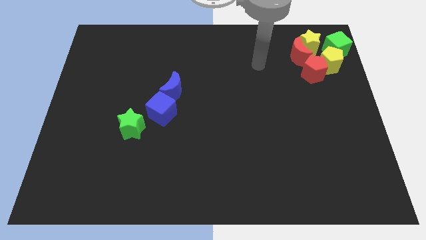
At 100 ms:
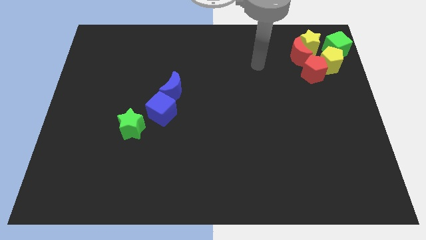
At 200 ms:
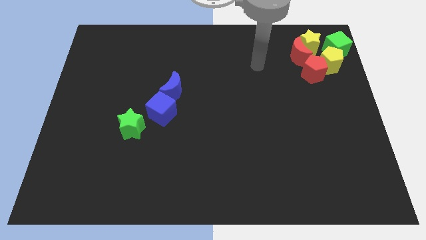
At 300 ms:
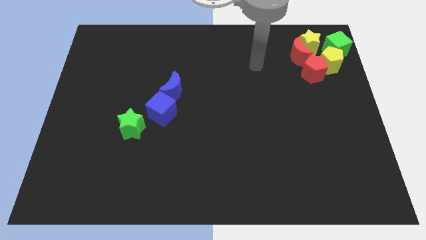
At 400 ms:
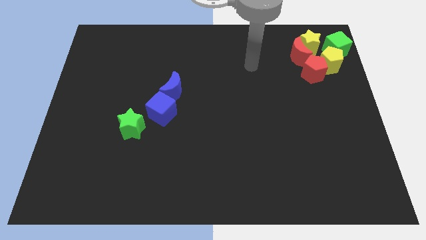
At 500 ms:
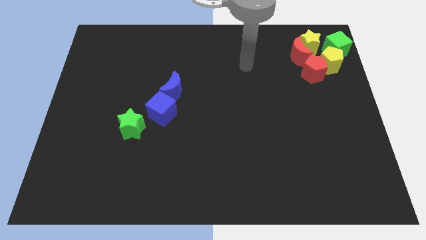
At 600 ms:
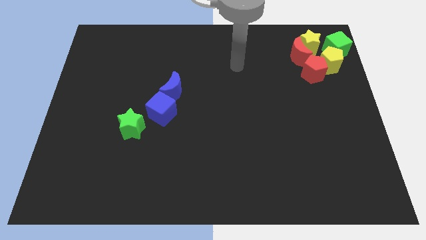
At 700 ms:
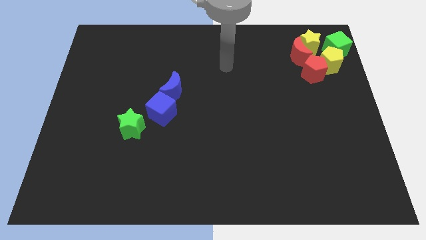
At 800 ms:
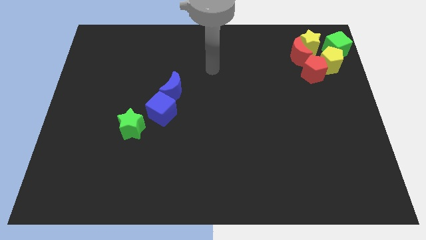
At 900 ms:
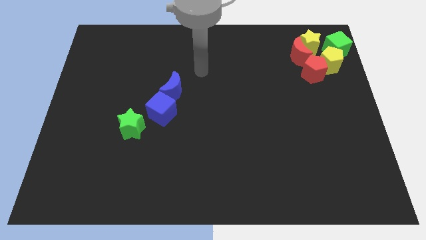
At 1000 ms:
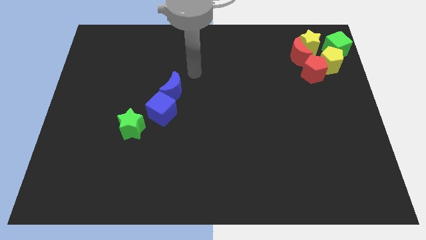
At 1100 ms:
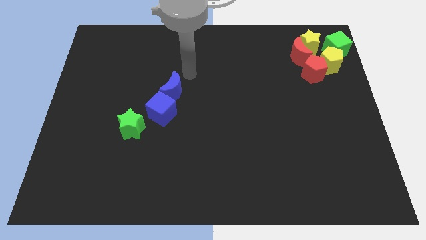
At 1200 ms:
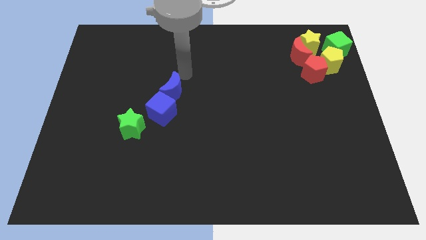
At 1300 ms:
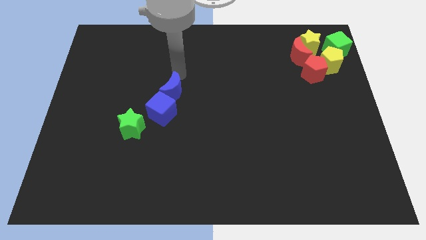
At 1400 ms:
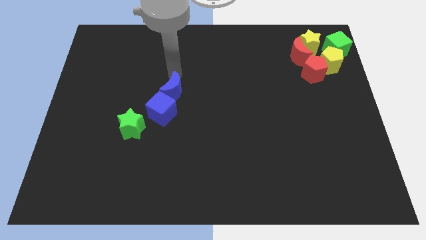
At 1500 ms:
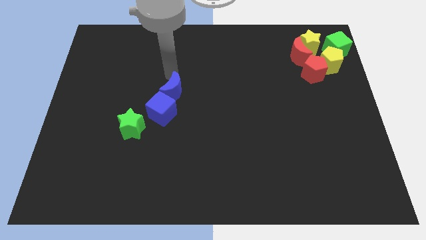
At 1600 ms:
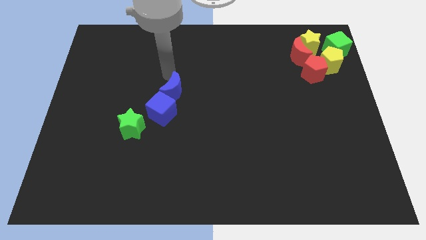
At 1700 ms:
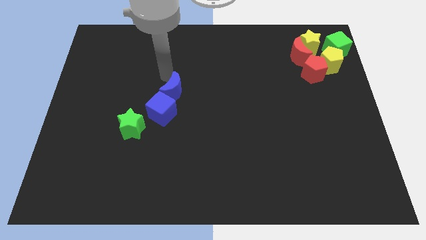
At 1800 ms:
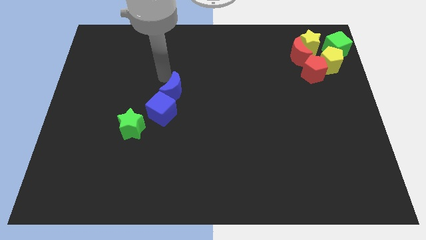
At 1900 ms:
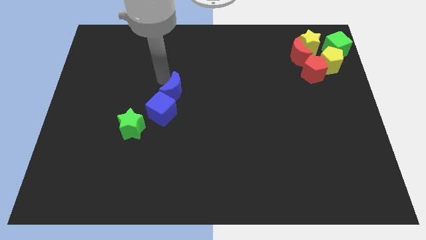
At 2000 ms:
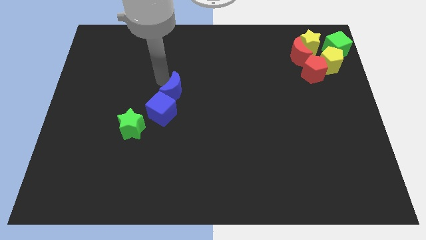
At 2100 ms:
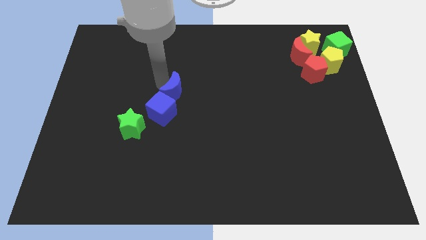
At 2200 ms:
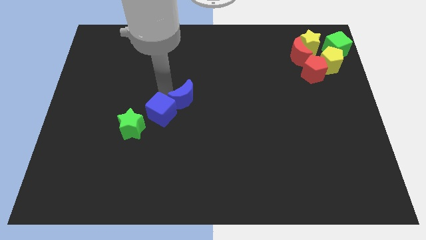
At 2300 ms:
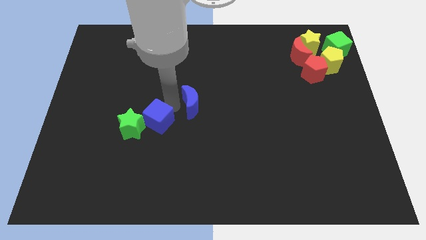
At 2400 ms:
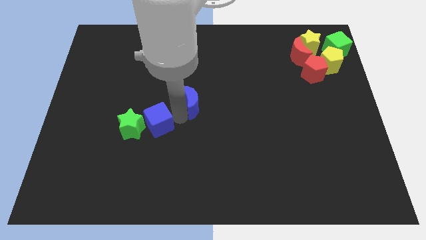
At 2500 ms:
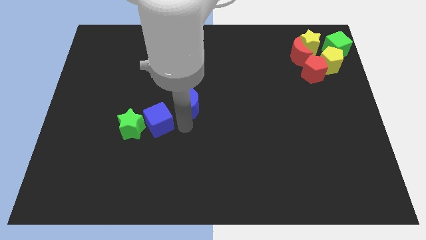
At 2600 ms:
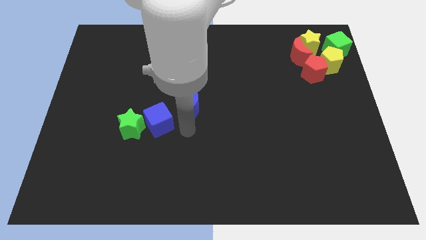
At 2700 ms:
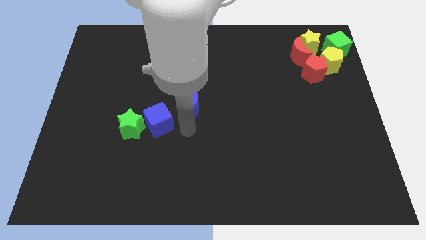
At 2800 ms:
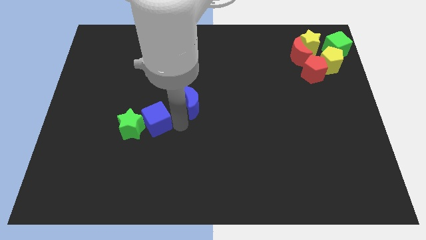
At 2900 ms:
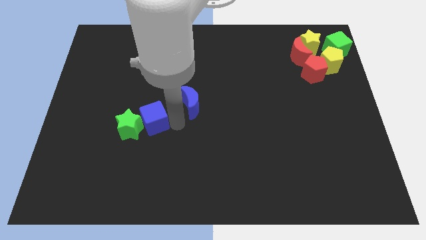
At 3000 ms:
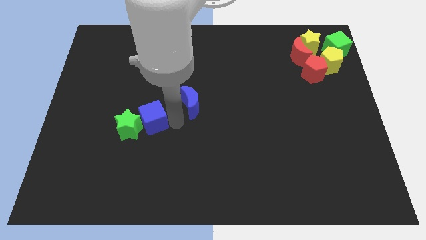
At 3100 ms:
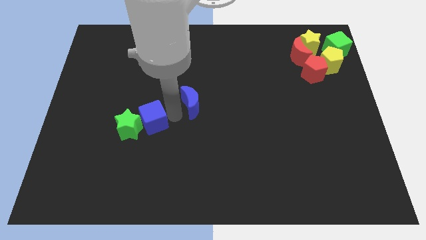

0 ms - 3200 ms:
place your hand in between the blue blocks

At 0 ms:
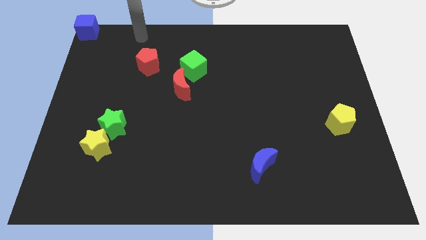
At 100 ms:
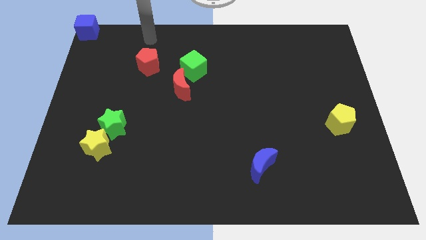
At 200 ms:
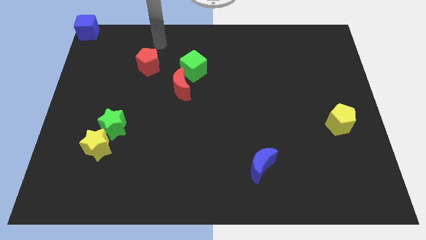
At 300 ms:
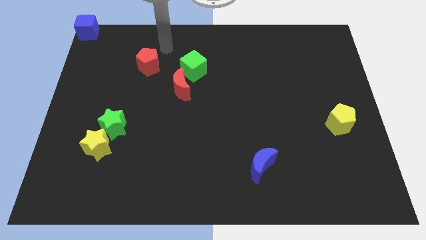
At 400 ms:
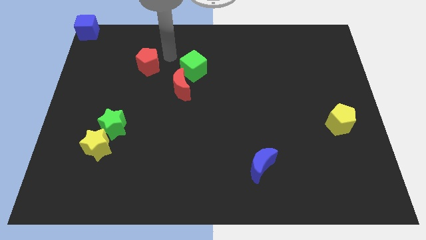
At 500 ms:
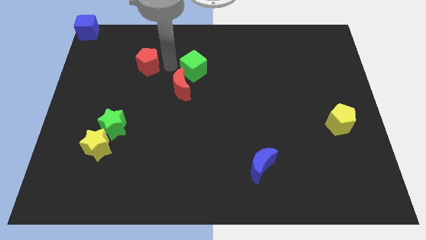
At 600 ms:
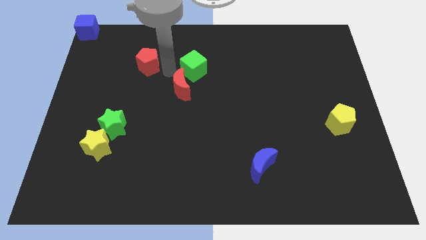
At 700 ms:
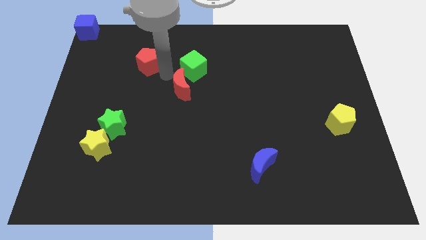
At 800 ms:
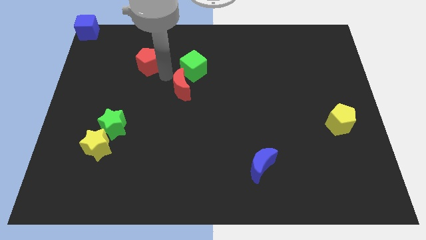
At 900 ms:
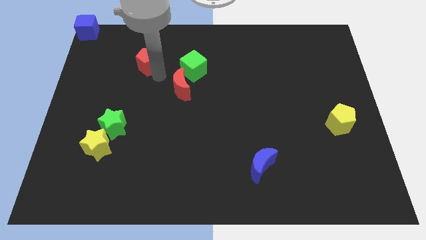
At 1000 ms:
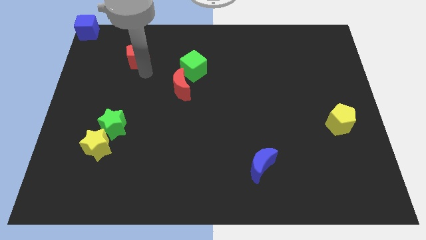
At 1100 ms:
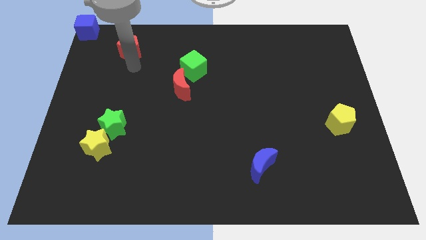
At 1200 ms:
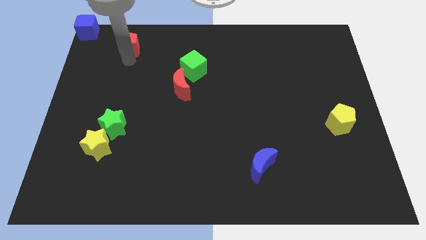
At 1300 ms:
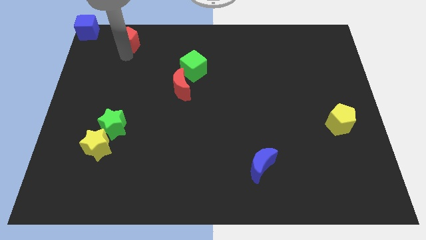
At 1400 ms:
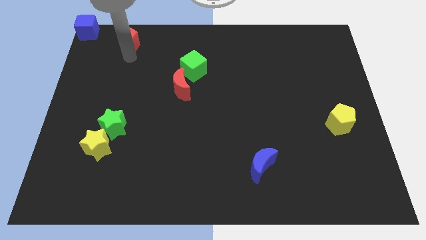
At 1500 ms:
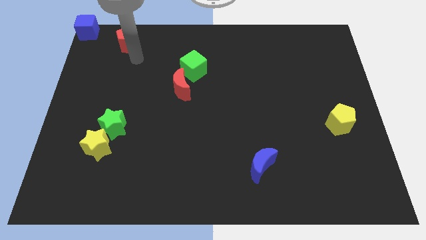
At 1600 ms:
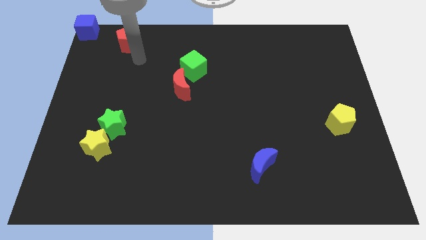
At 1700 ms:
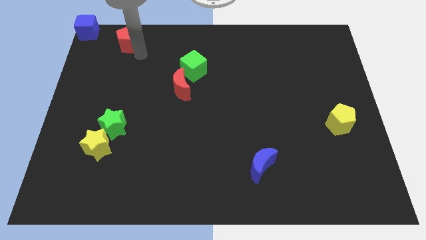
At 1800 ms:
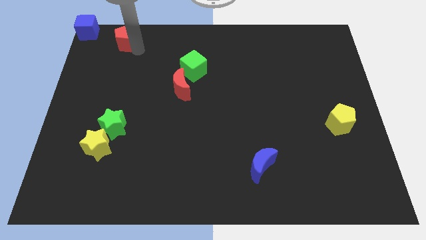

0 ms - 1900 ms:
move the red pentagon to the top left of the board

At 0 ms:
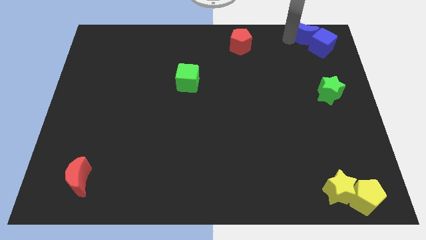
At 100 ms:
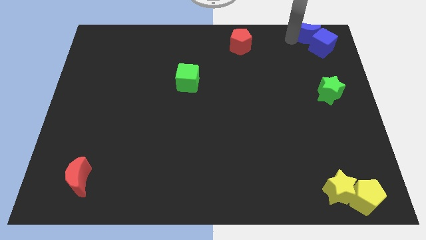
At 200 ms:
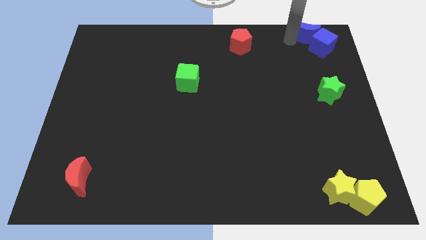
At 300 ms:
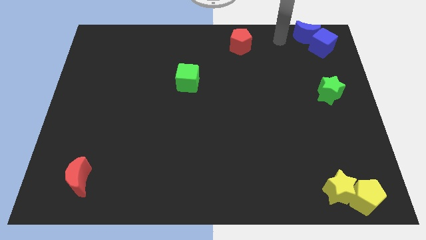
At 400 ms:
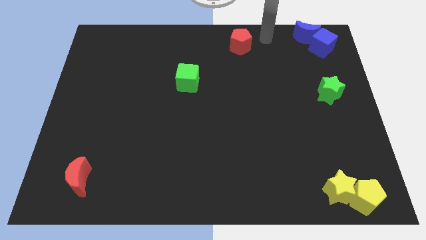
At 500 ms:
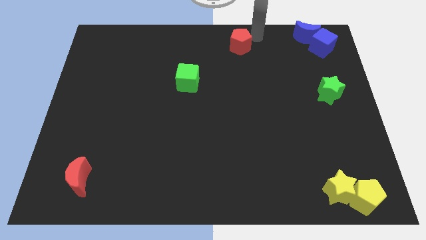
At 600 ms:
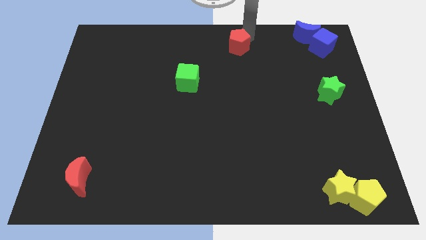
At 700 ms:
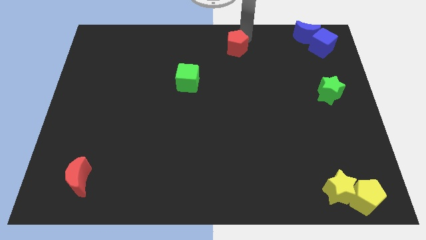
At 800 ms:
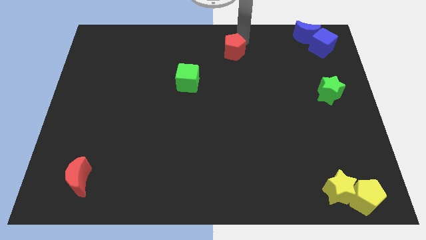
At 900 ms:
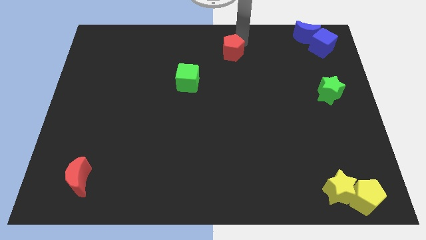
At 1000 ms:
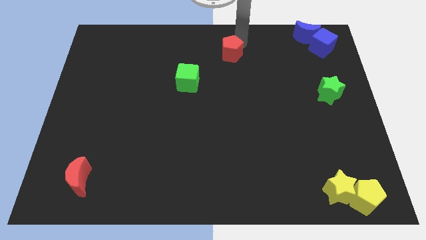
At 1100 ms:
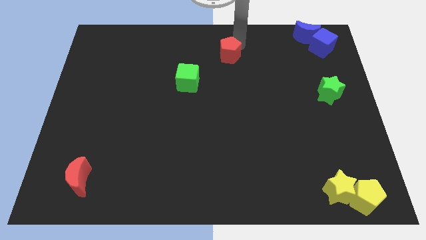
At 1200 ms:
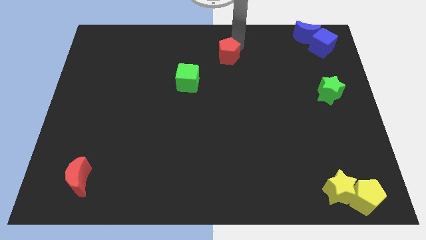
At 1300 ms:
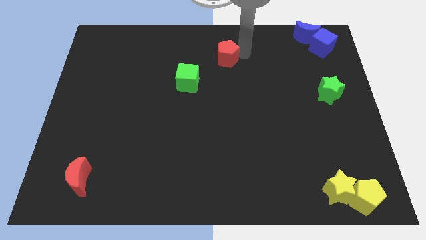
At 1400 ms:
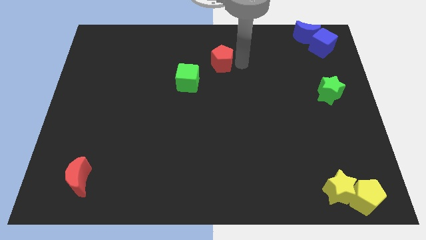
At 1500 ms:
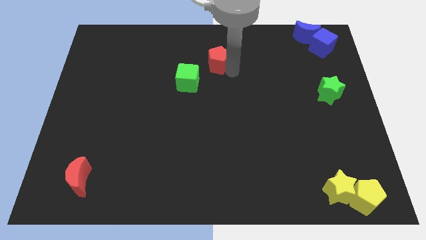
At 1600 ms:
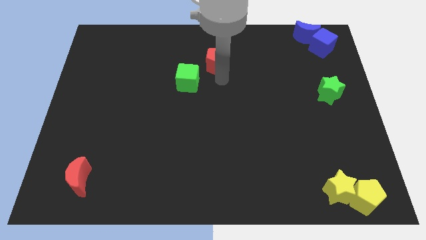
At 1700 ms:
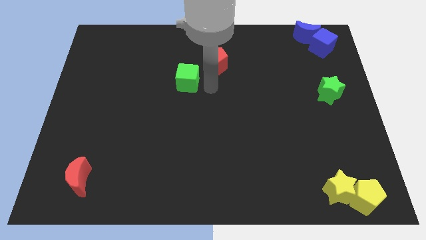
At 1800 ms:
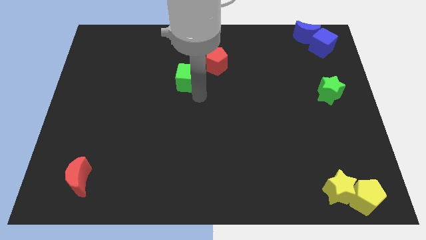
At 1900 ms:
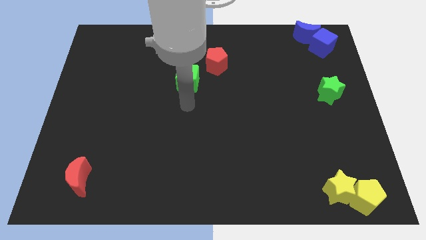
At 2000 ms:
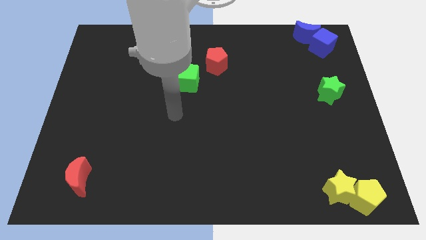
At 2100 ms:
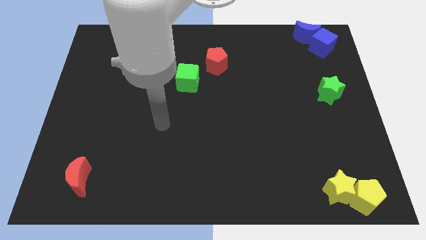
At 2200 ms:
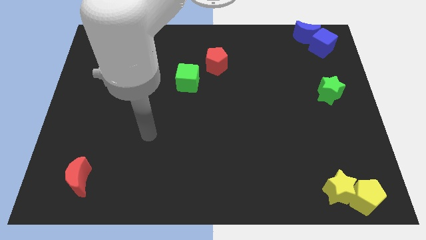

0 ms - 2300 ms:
slide the red pentagon close to the green cube

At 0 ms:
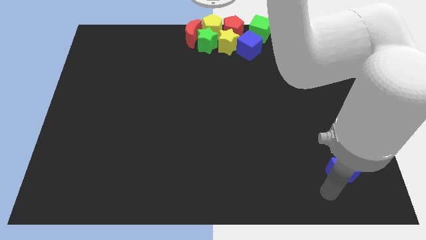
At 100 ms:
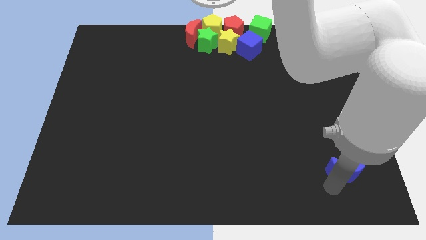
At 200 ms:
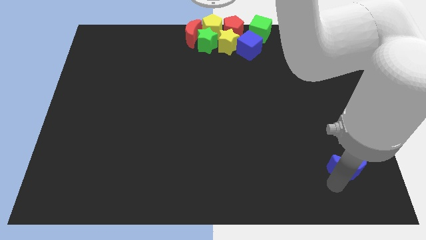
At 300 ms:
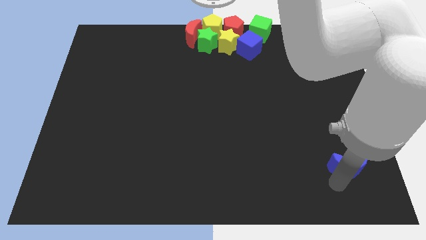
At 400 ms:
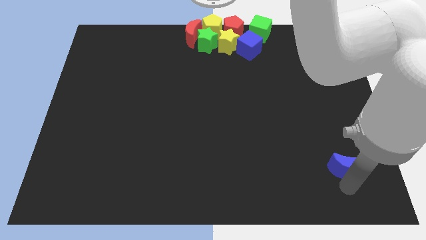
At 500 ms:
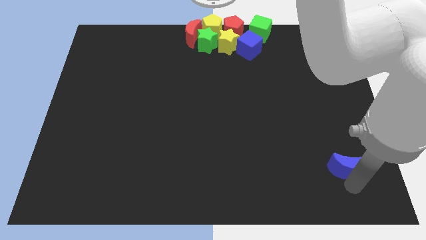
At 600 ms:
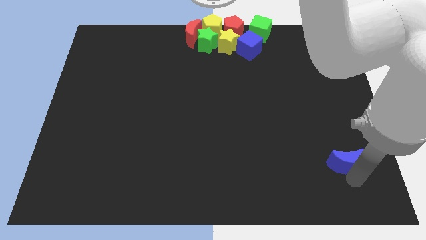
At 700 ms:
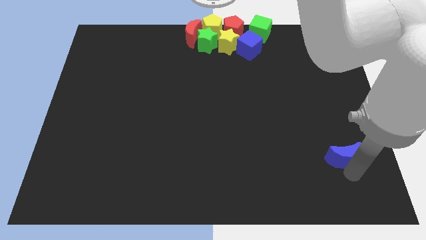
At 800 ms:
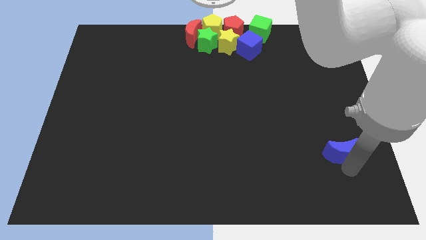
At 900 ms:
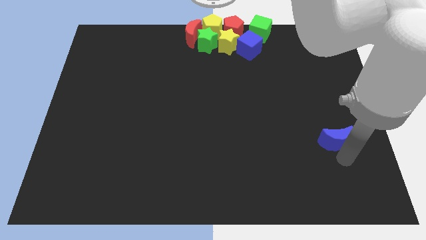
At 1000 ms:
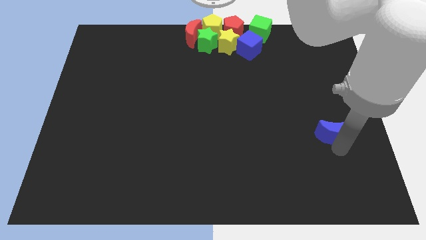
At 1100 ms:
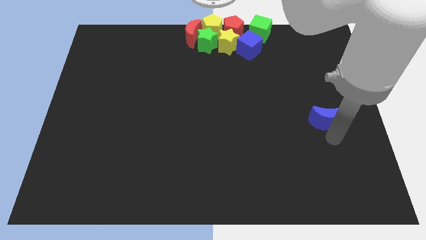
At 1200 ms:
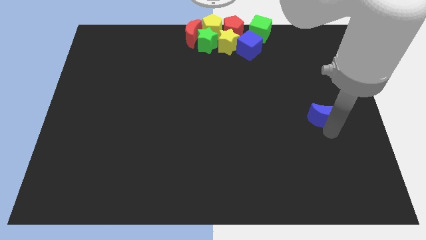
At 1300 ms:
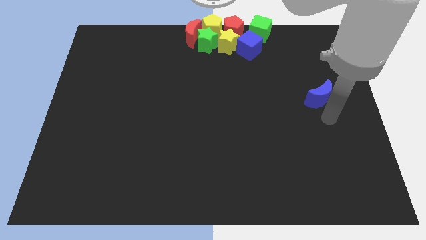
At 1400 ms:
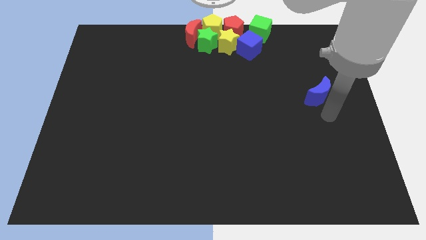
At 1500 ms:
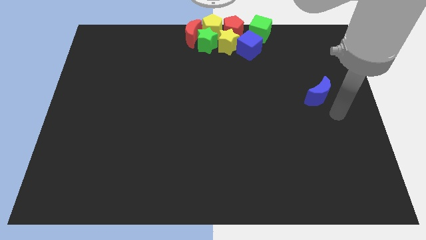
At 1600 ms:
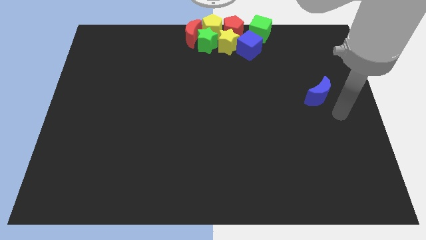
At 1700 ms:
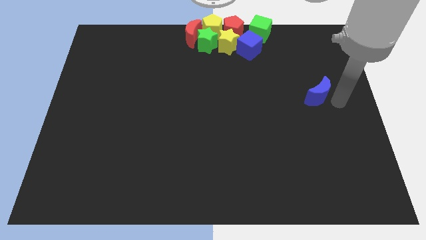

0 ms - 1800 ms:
push the blue moon to the top side of the board
